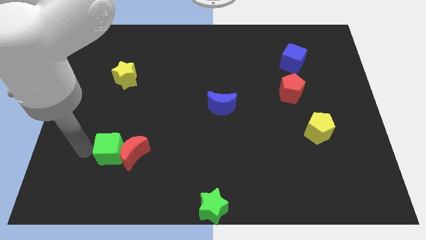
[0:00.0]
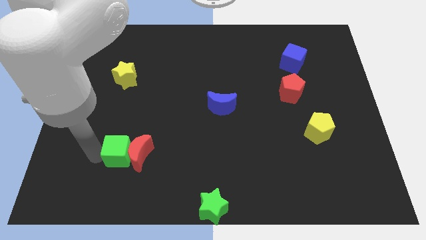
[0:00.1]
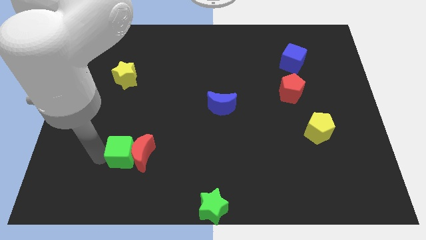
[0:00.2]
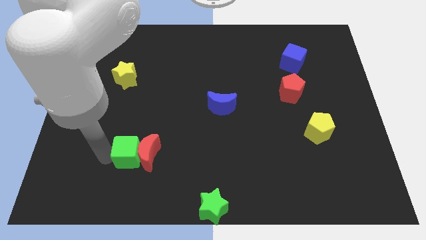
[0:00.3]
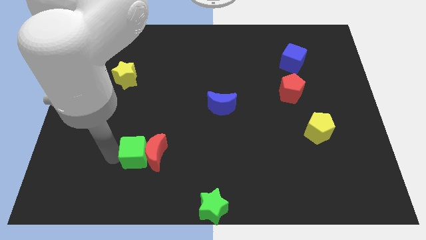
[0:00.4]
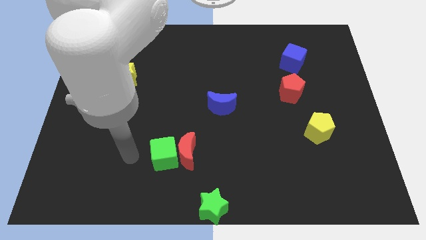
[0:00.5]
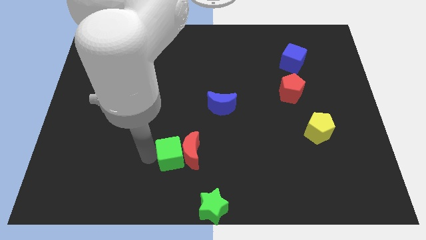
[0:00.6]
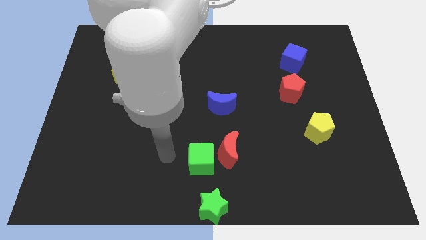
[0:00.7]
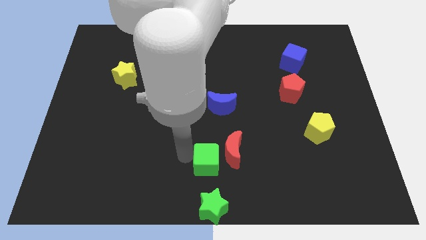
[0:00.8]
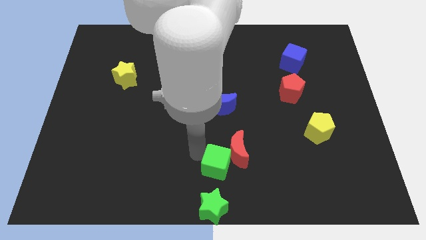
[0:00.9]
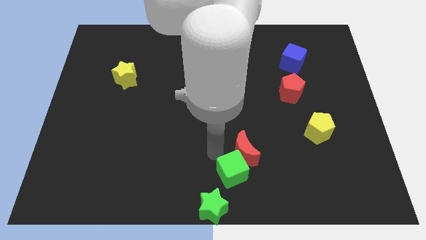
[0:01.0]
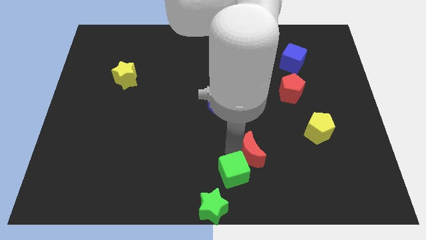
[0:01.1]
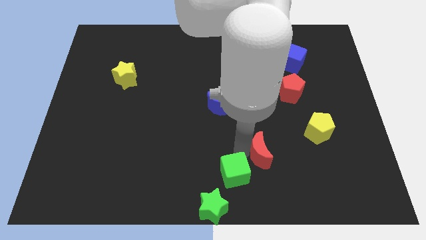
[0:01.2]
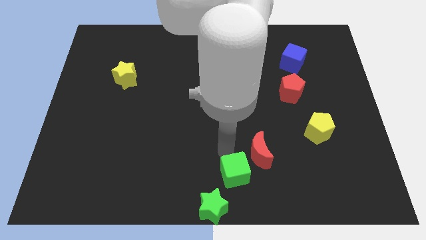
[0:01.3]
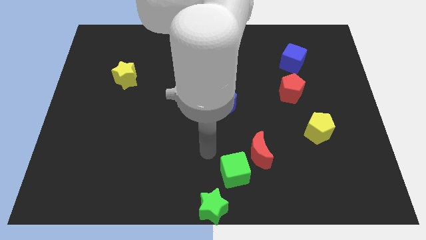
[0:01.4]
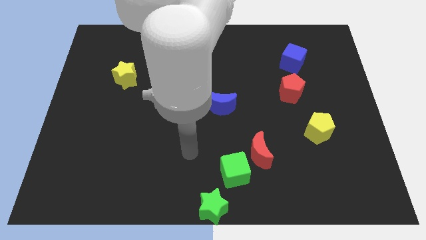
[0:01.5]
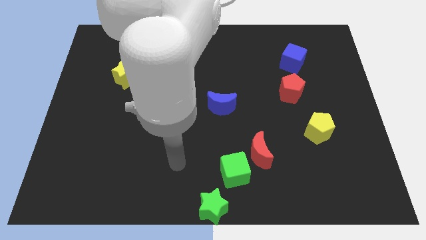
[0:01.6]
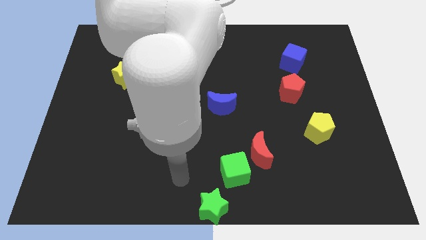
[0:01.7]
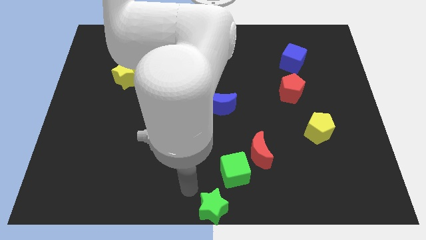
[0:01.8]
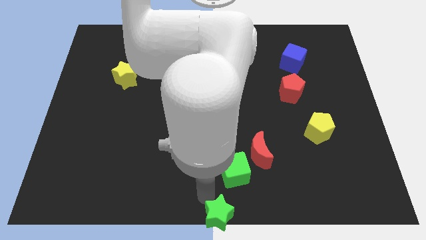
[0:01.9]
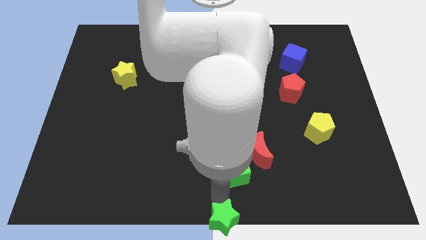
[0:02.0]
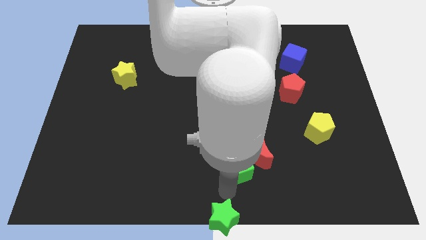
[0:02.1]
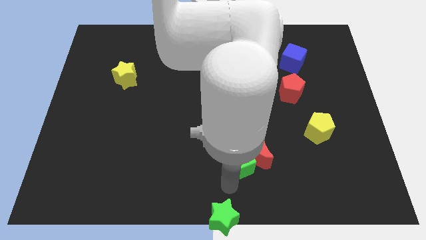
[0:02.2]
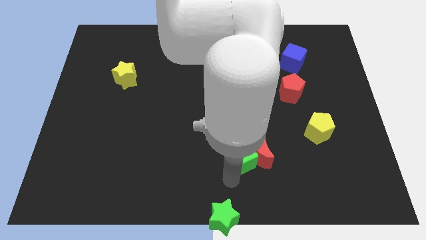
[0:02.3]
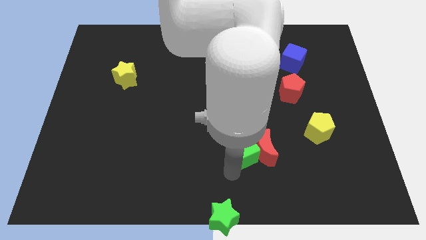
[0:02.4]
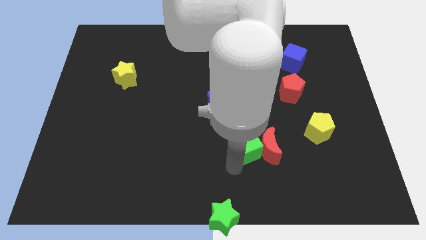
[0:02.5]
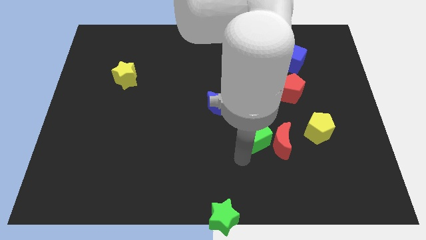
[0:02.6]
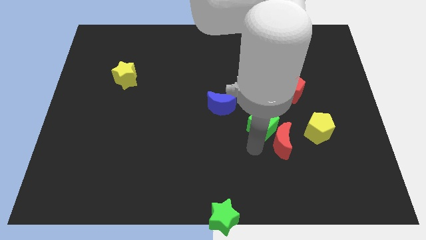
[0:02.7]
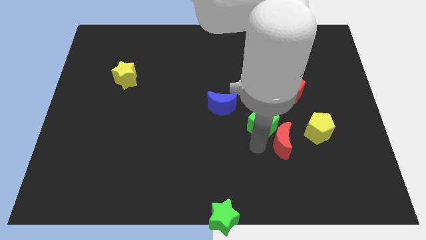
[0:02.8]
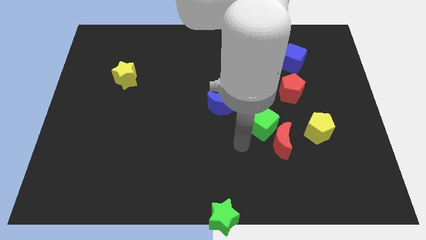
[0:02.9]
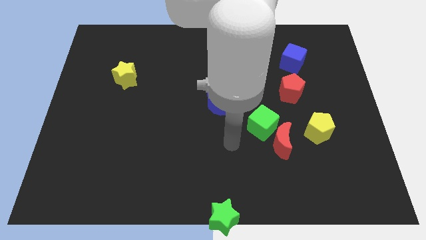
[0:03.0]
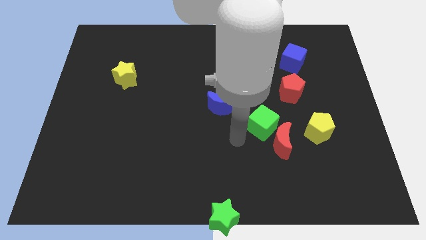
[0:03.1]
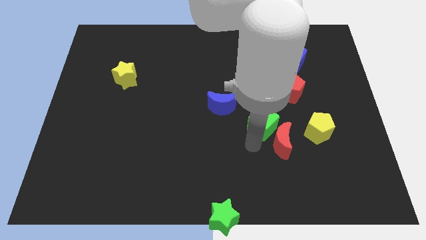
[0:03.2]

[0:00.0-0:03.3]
place green cube to the bottom left of red pentagon

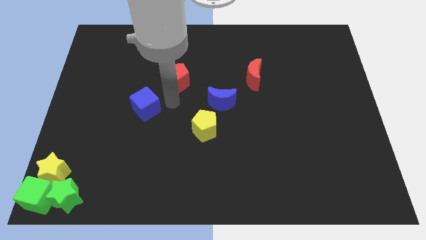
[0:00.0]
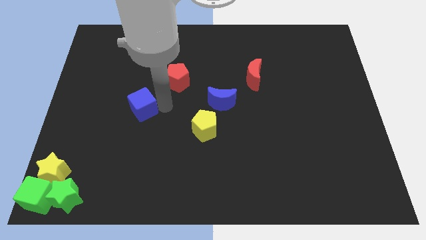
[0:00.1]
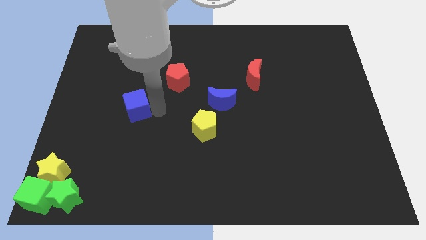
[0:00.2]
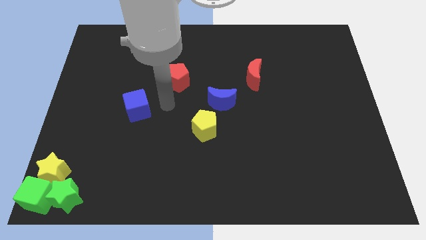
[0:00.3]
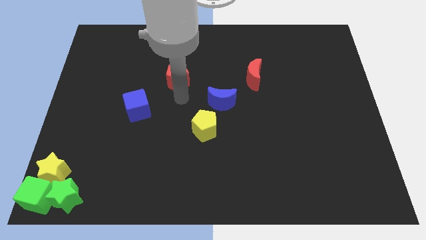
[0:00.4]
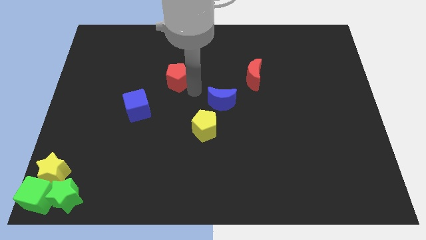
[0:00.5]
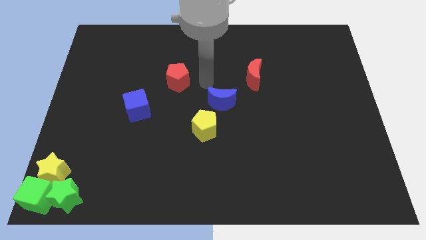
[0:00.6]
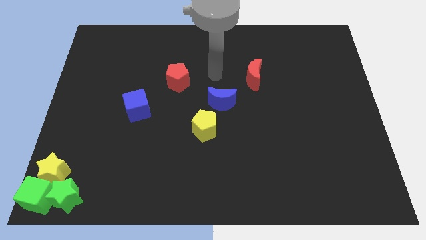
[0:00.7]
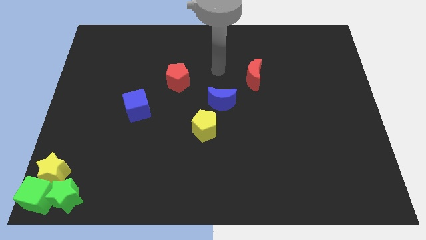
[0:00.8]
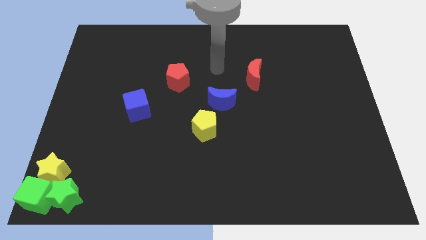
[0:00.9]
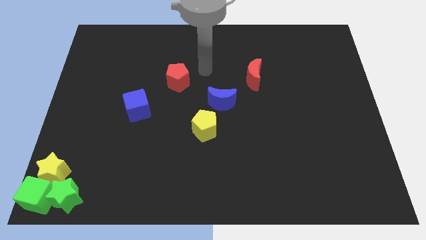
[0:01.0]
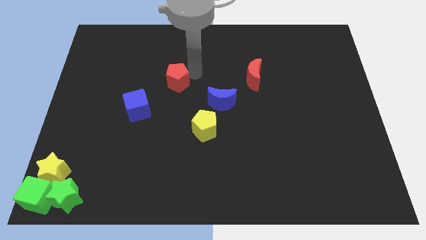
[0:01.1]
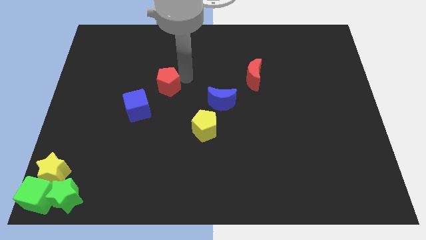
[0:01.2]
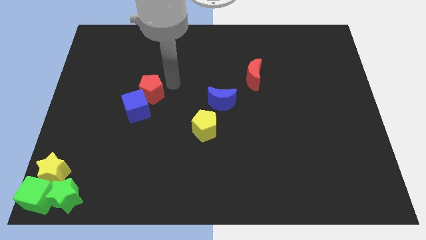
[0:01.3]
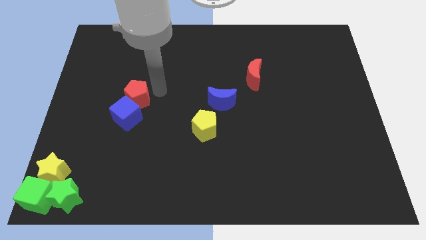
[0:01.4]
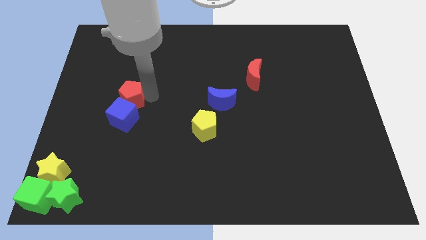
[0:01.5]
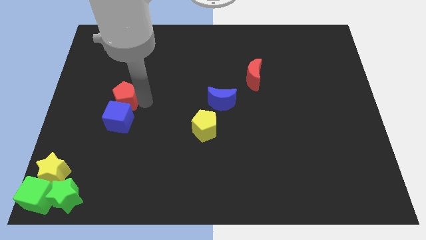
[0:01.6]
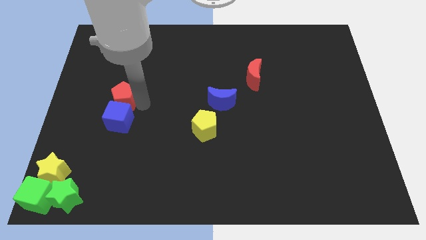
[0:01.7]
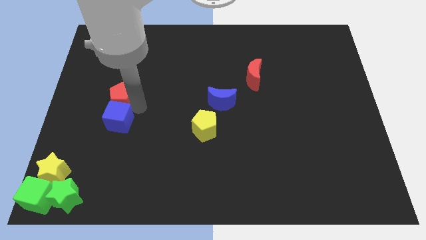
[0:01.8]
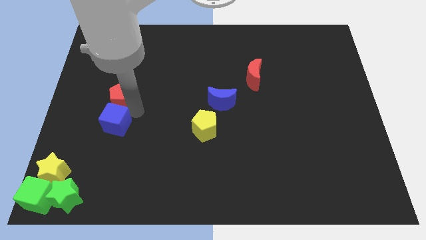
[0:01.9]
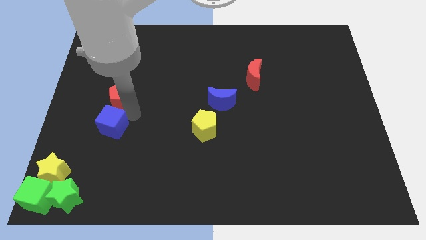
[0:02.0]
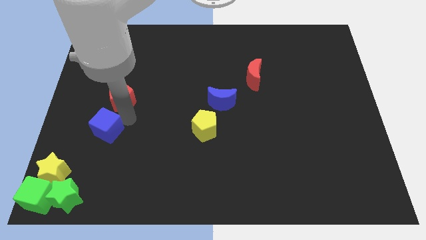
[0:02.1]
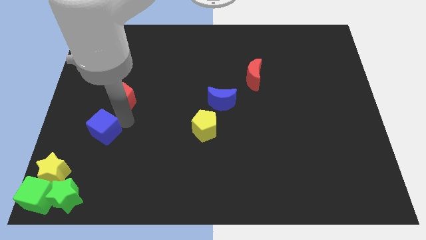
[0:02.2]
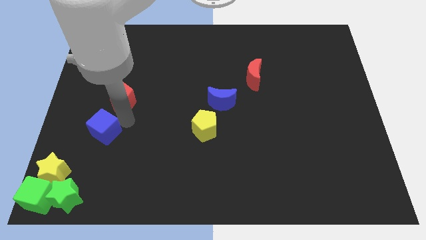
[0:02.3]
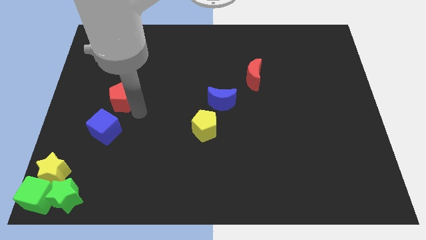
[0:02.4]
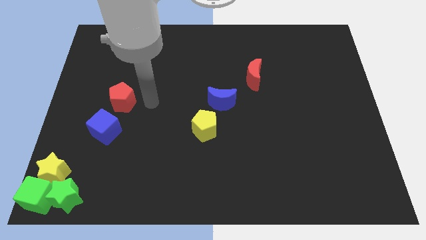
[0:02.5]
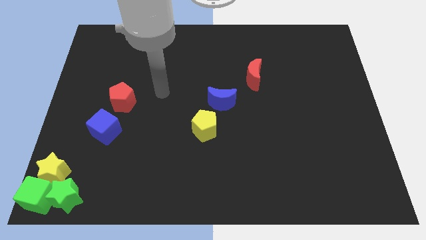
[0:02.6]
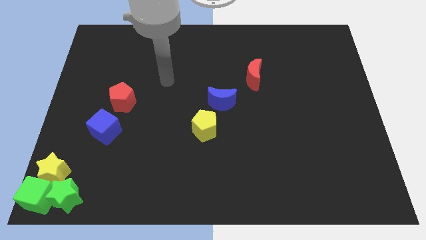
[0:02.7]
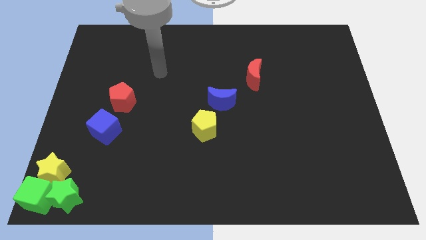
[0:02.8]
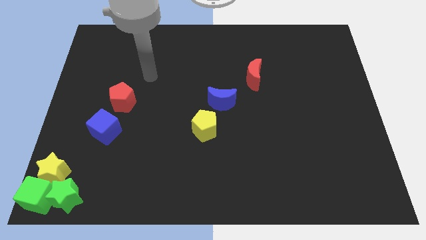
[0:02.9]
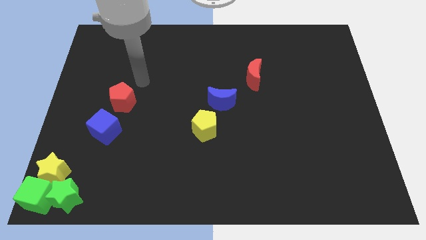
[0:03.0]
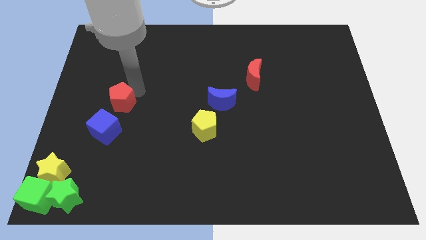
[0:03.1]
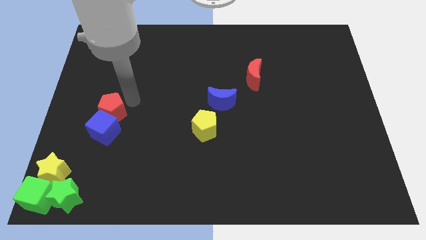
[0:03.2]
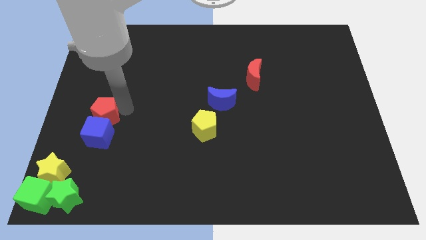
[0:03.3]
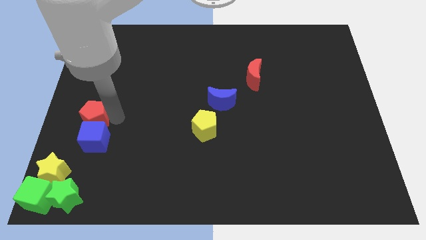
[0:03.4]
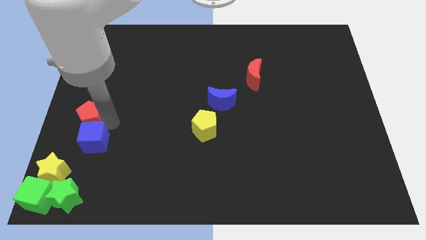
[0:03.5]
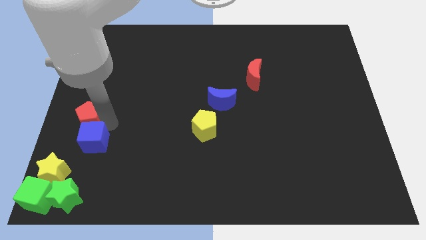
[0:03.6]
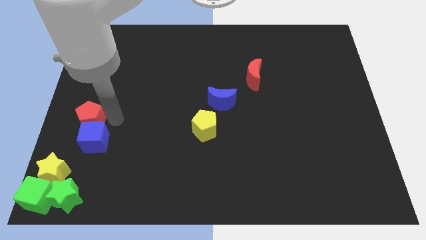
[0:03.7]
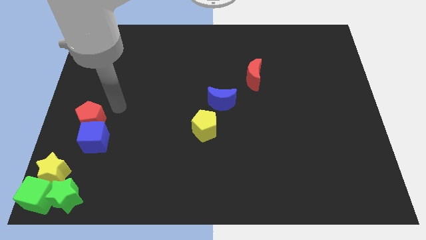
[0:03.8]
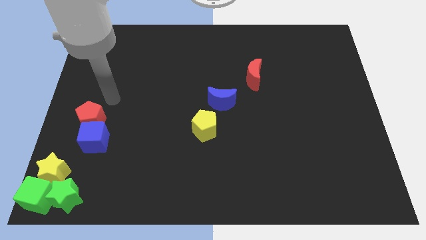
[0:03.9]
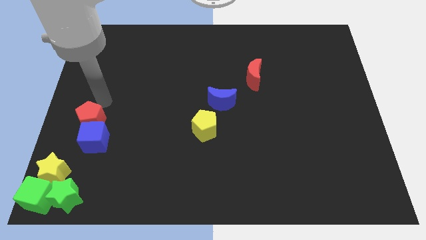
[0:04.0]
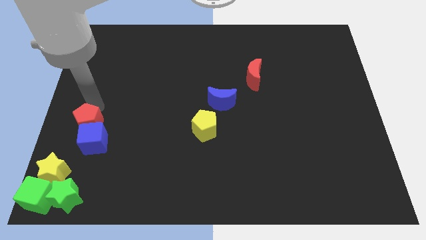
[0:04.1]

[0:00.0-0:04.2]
push red pentagon into the blue cube

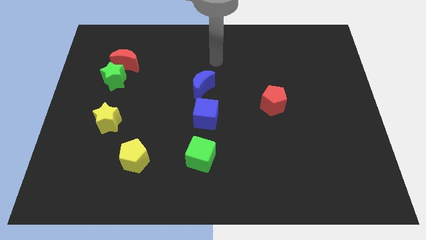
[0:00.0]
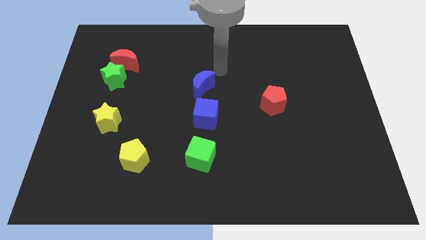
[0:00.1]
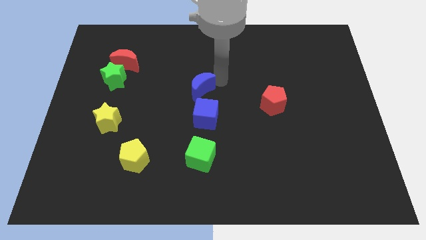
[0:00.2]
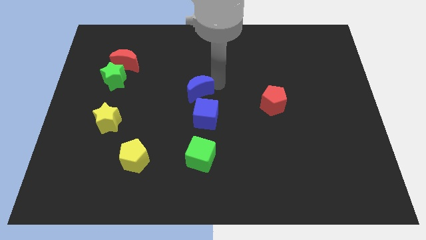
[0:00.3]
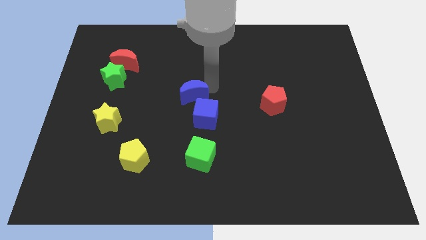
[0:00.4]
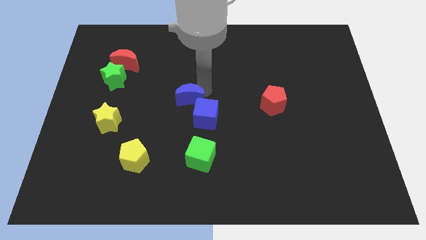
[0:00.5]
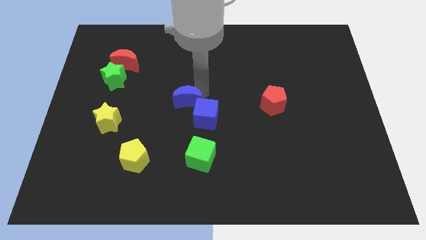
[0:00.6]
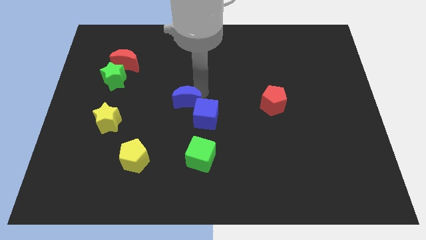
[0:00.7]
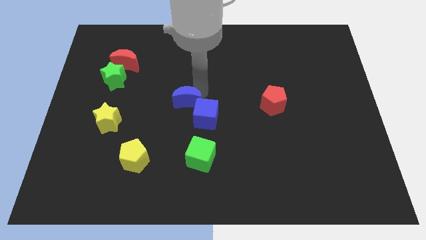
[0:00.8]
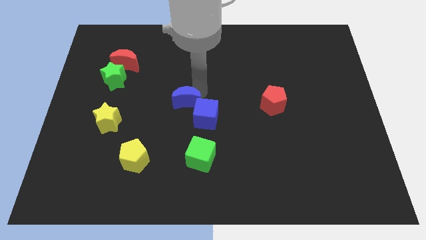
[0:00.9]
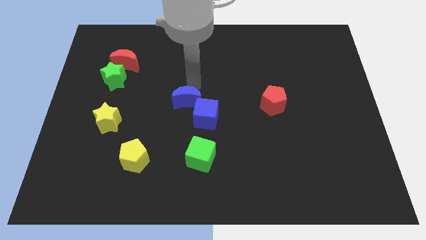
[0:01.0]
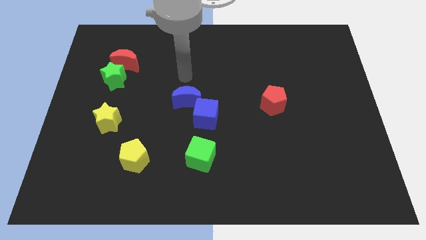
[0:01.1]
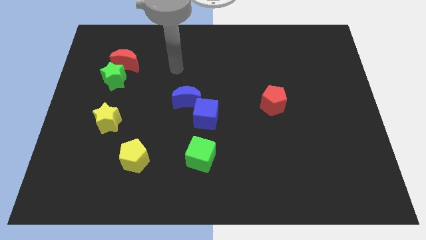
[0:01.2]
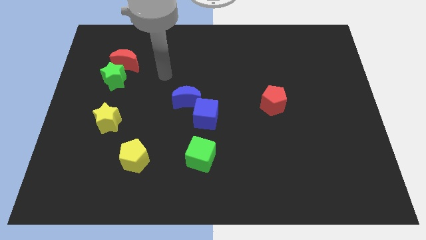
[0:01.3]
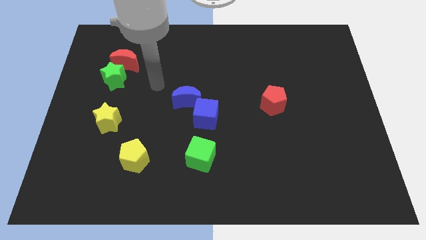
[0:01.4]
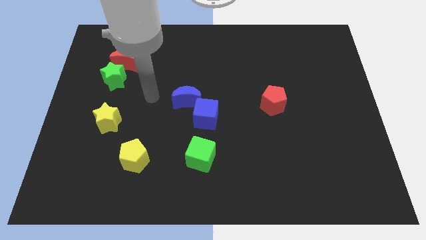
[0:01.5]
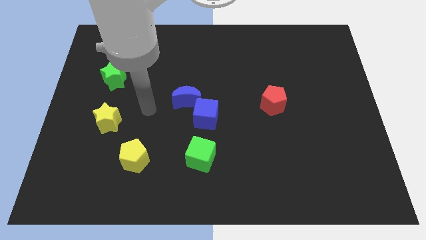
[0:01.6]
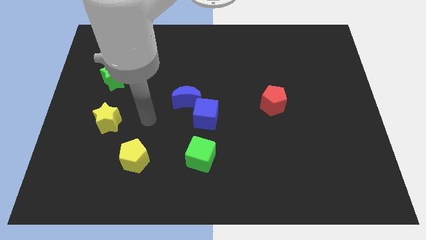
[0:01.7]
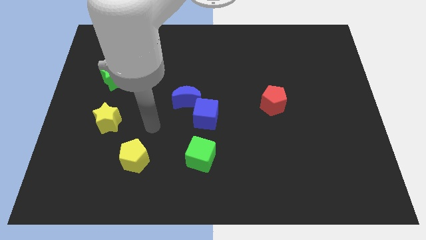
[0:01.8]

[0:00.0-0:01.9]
push the blue moon close to the blue cube
